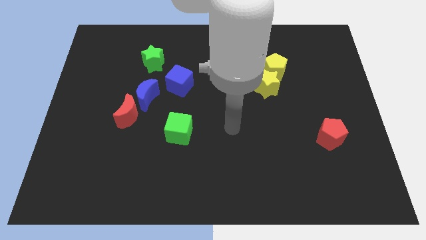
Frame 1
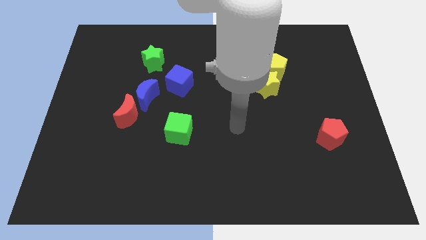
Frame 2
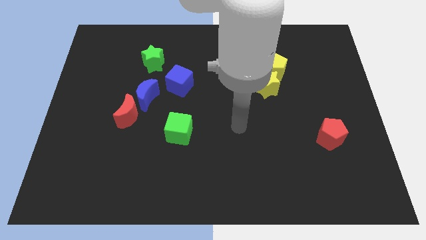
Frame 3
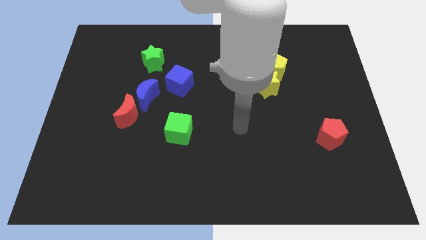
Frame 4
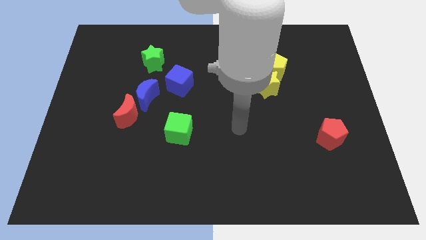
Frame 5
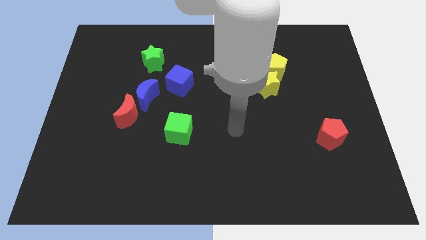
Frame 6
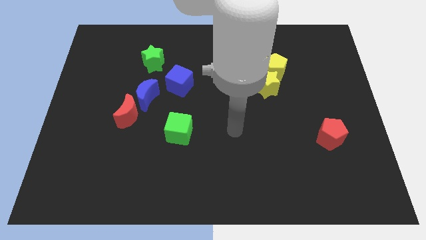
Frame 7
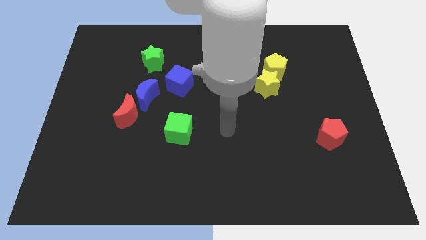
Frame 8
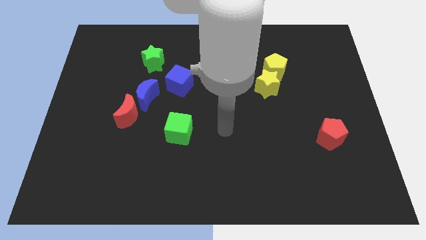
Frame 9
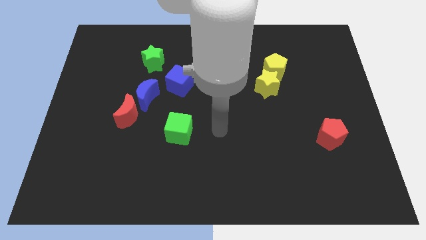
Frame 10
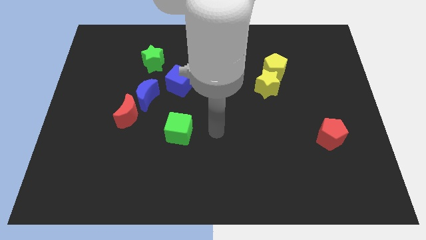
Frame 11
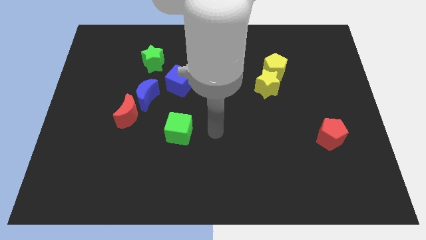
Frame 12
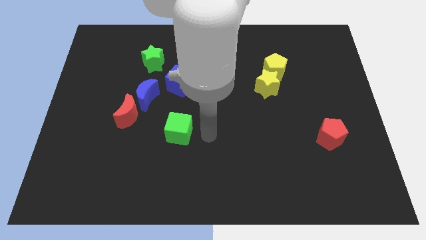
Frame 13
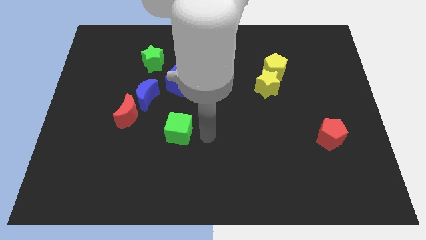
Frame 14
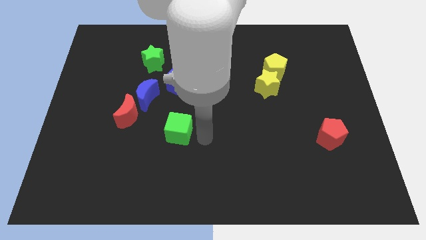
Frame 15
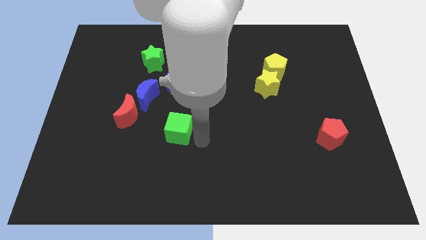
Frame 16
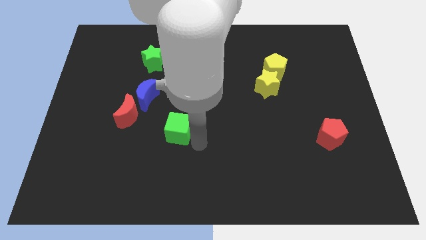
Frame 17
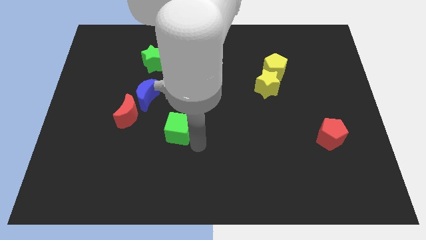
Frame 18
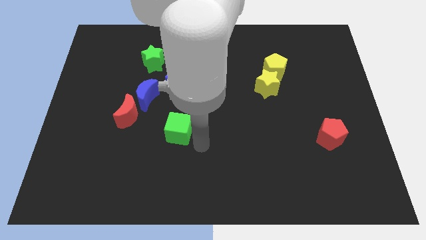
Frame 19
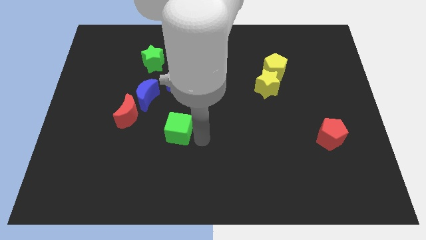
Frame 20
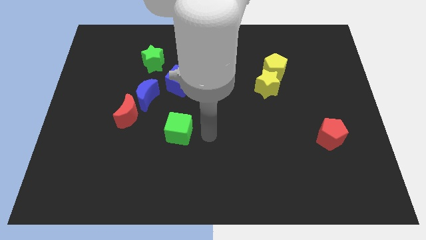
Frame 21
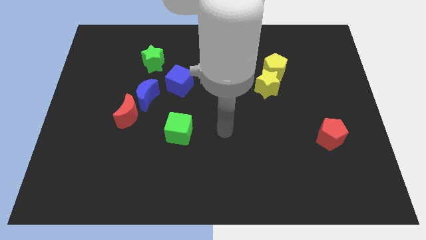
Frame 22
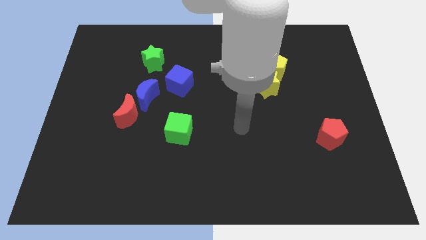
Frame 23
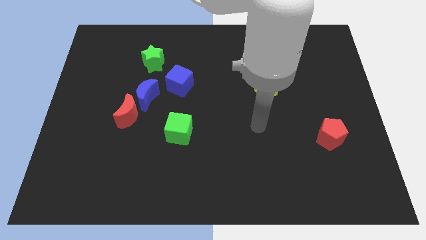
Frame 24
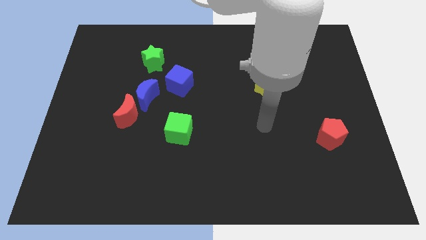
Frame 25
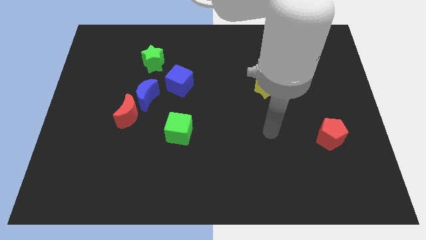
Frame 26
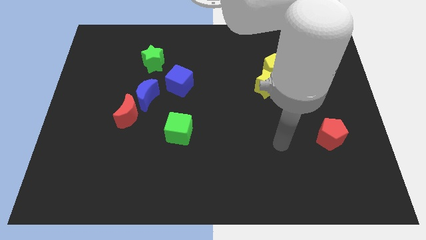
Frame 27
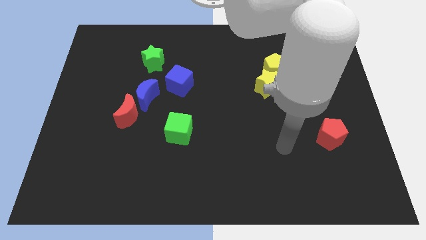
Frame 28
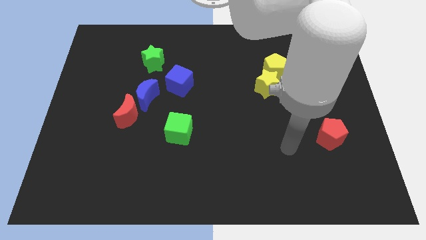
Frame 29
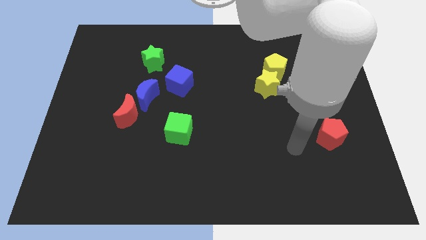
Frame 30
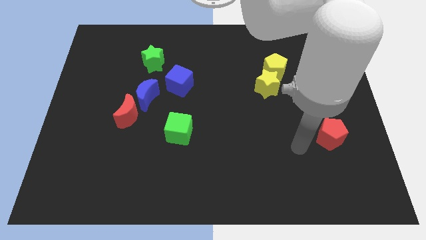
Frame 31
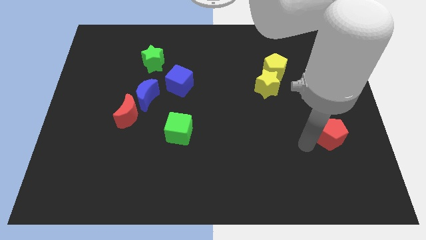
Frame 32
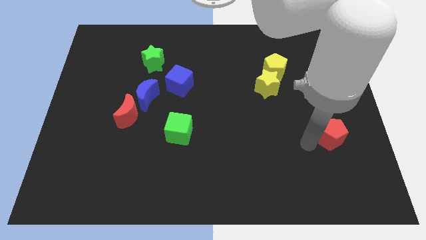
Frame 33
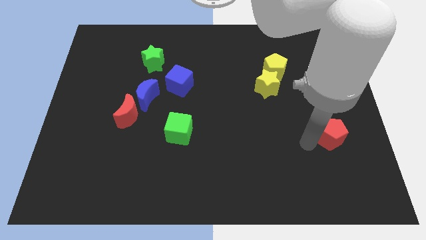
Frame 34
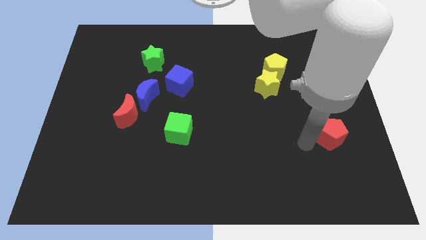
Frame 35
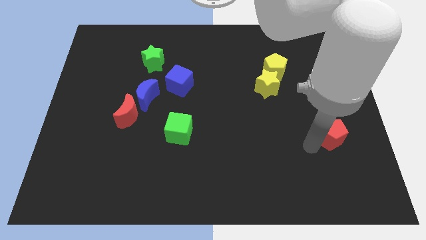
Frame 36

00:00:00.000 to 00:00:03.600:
point the arm to the left of the red pentagon

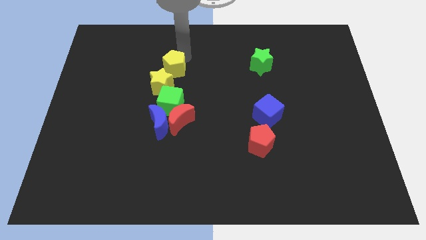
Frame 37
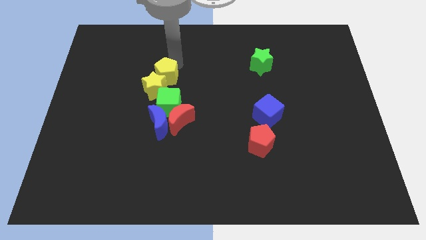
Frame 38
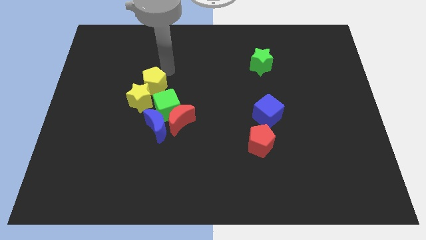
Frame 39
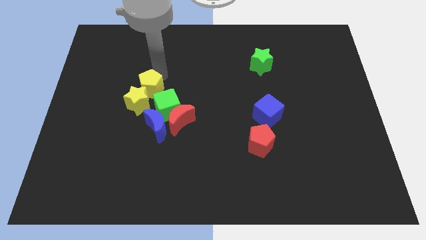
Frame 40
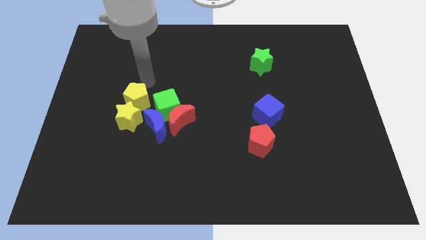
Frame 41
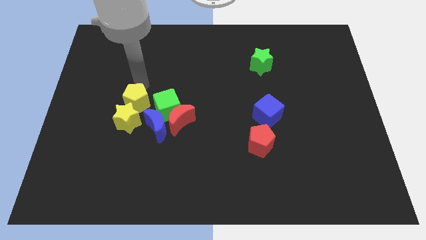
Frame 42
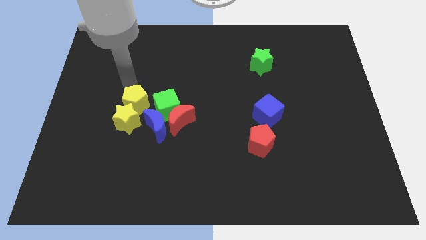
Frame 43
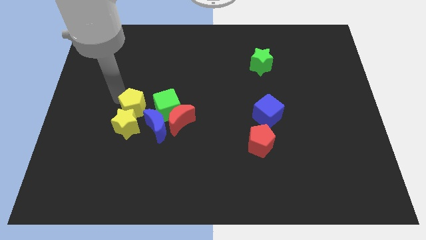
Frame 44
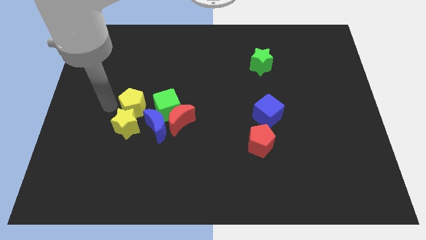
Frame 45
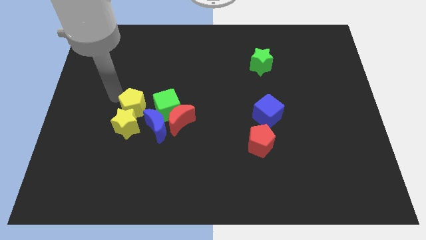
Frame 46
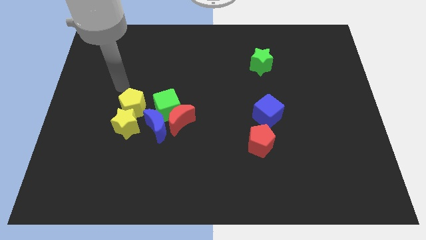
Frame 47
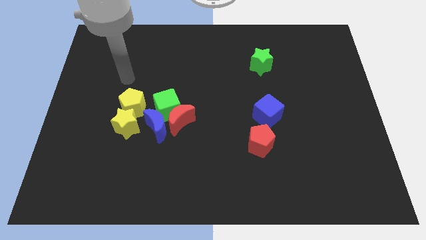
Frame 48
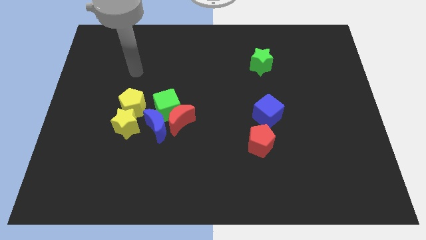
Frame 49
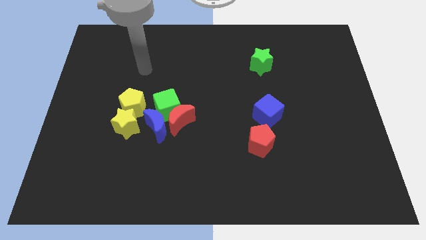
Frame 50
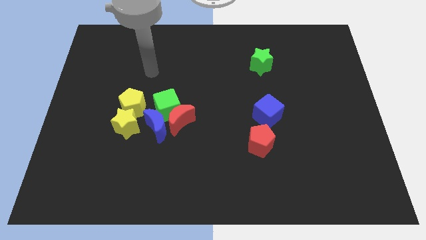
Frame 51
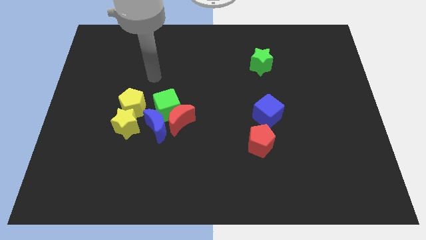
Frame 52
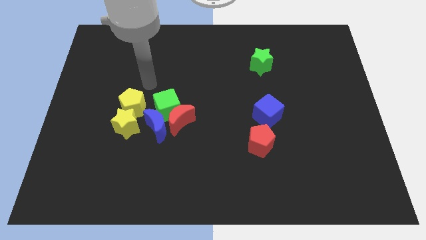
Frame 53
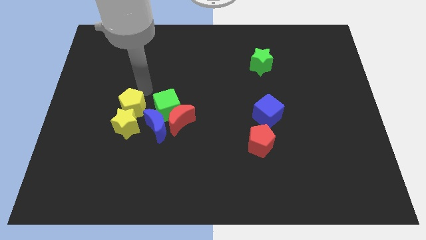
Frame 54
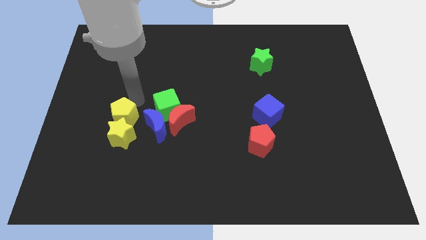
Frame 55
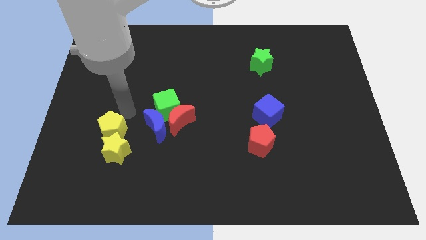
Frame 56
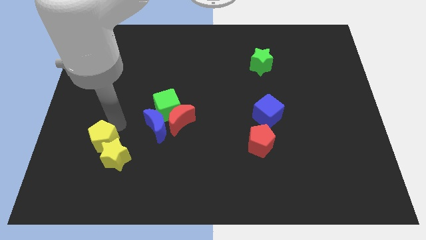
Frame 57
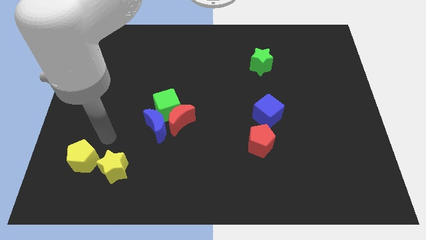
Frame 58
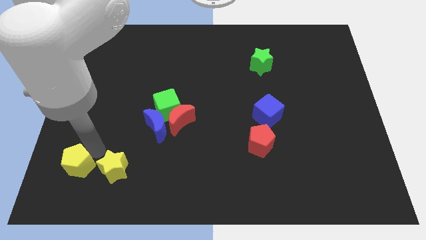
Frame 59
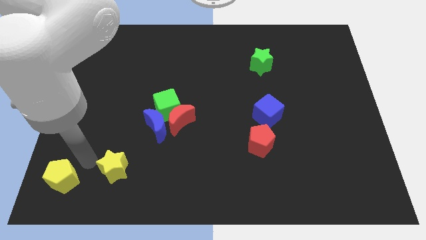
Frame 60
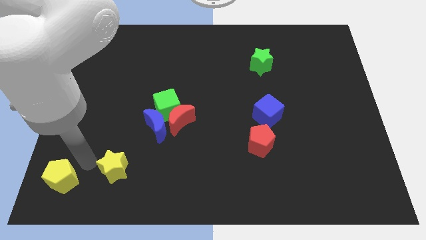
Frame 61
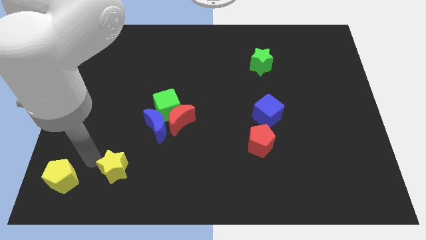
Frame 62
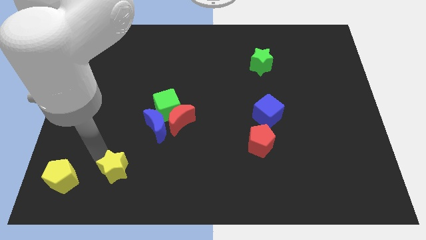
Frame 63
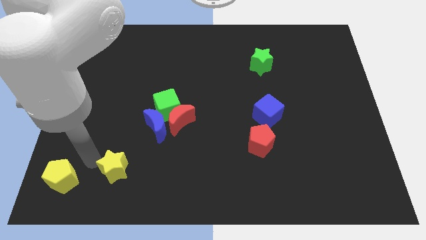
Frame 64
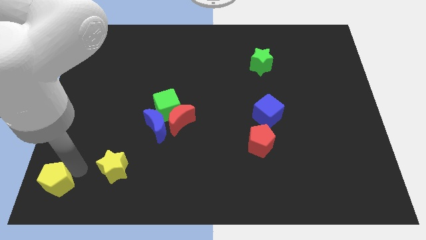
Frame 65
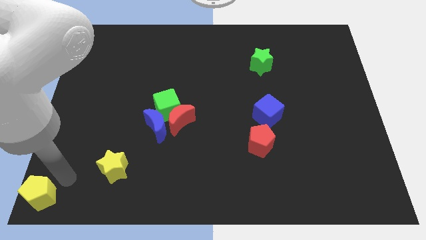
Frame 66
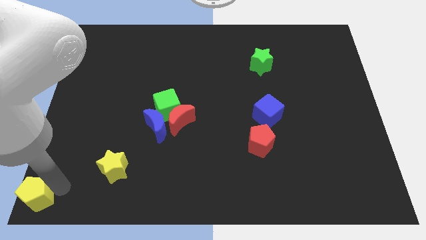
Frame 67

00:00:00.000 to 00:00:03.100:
separate the yellow star and yellow pentagon

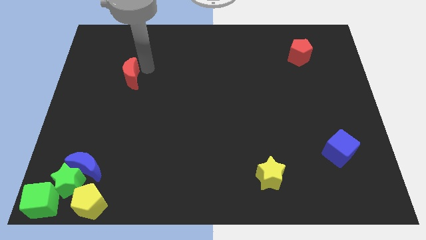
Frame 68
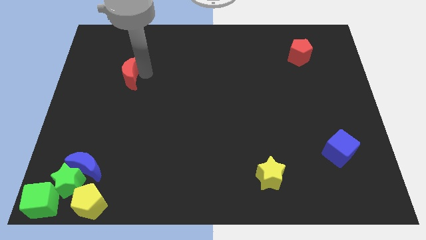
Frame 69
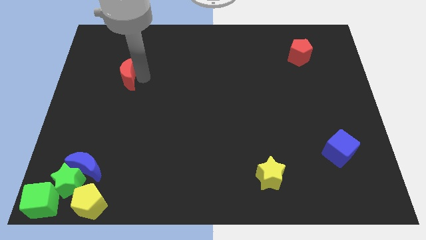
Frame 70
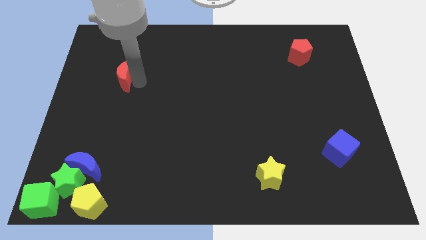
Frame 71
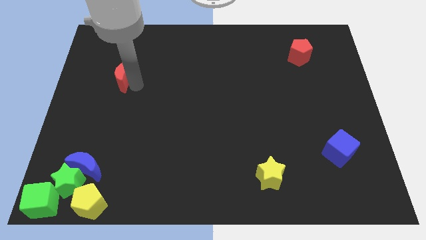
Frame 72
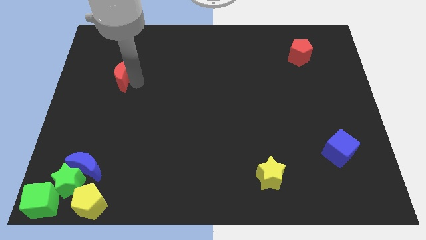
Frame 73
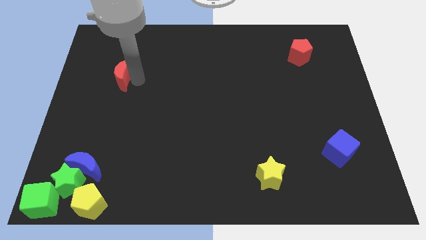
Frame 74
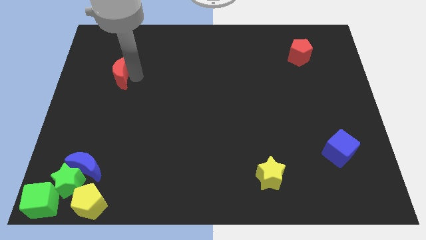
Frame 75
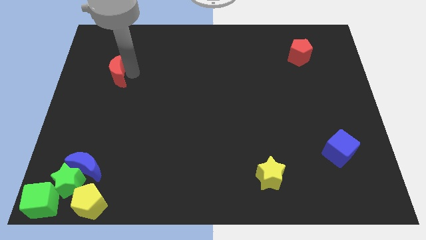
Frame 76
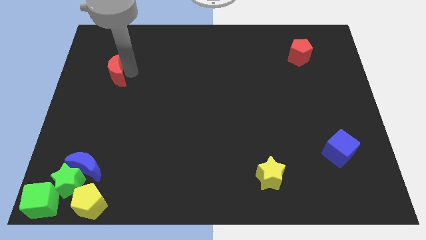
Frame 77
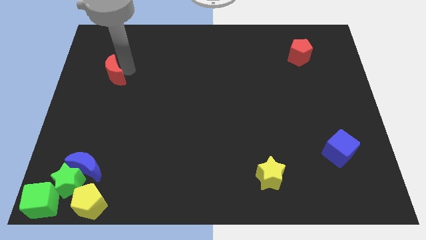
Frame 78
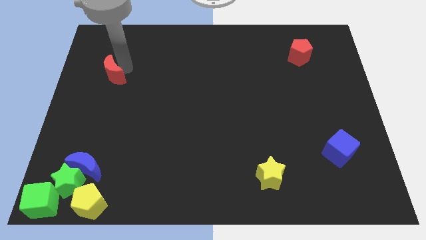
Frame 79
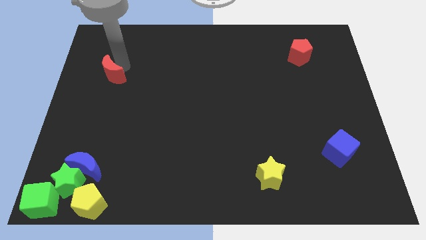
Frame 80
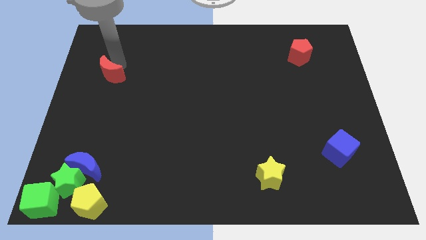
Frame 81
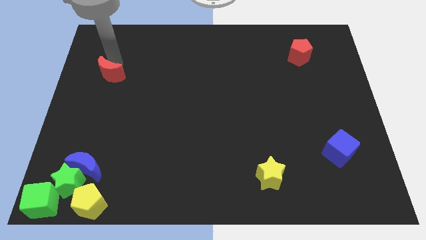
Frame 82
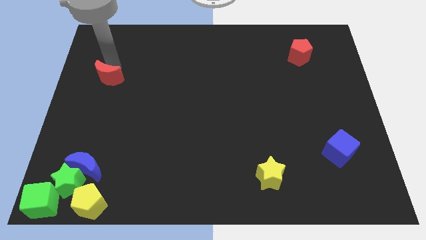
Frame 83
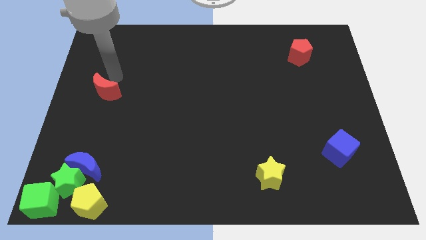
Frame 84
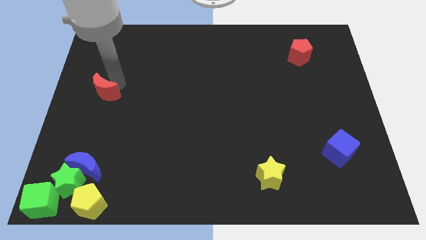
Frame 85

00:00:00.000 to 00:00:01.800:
push red crescent to the top of the blue crescent

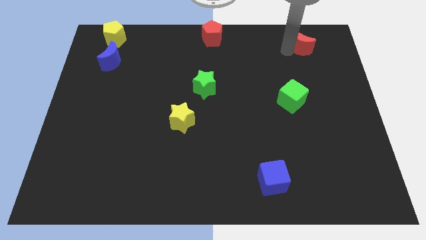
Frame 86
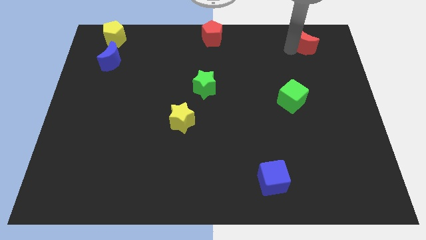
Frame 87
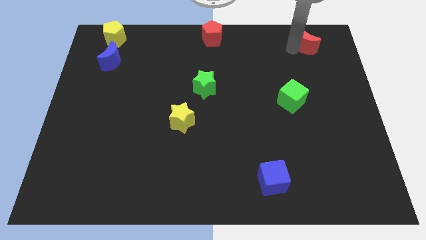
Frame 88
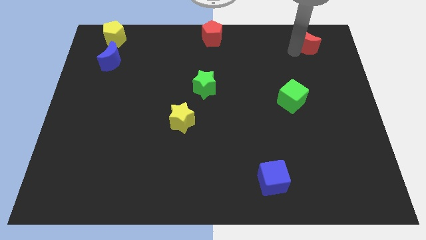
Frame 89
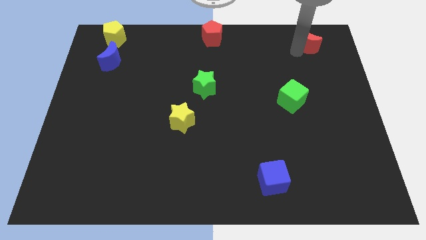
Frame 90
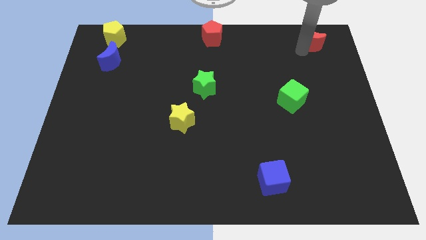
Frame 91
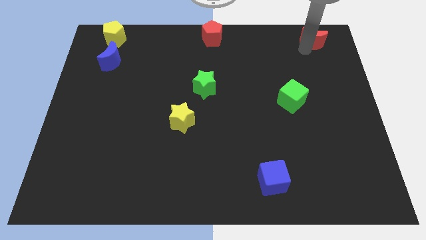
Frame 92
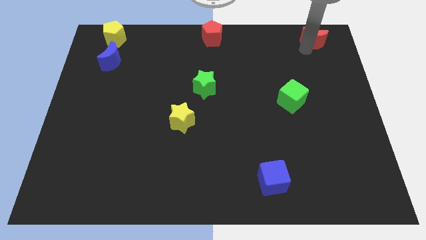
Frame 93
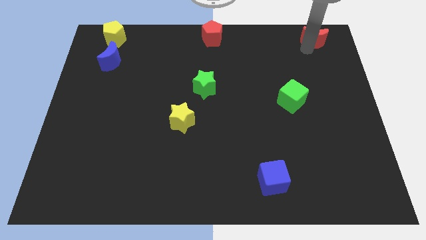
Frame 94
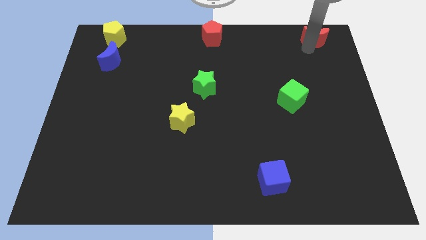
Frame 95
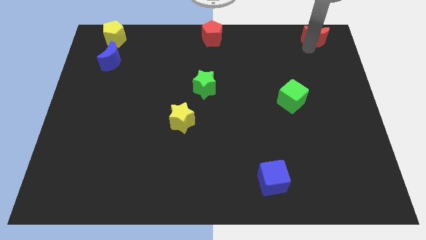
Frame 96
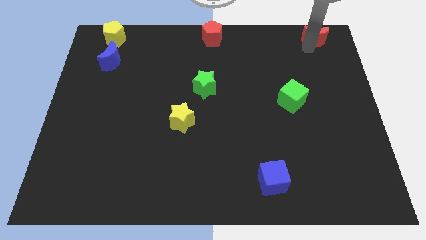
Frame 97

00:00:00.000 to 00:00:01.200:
place the red crescent towards the top right side of the board
